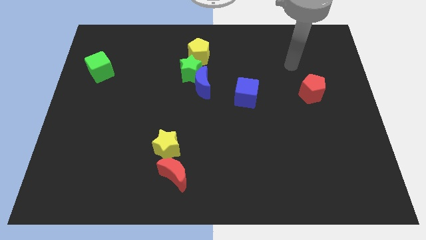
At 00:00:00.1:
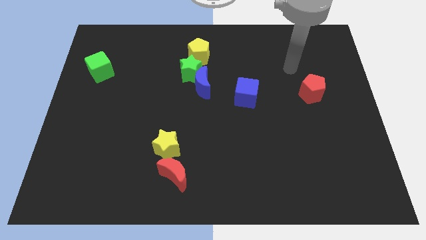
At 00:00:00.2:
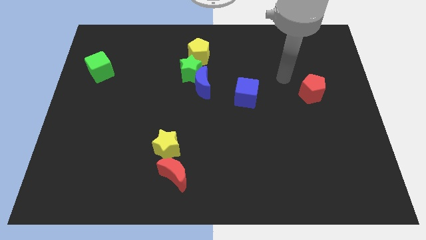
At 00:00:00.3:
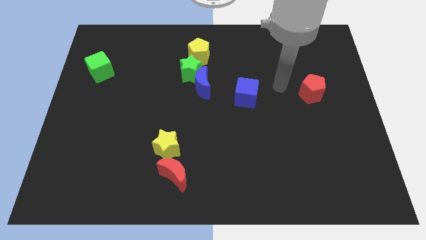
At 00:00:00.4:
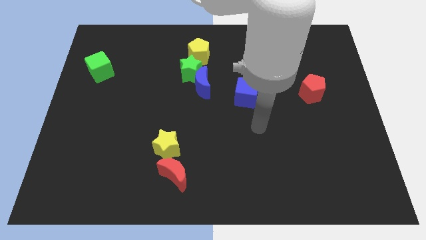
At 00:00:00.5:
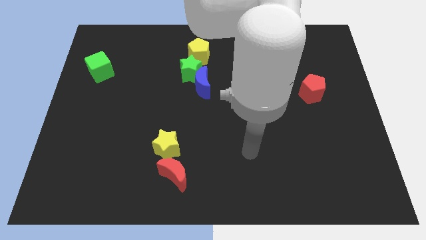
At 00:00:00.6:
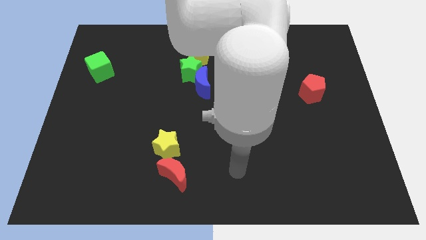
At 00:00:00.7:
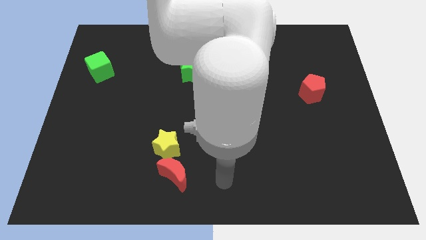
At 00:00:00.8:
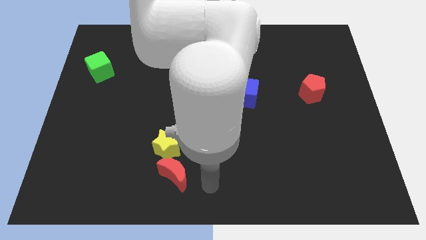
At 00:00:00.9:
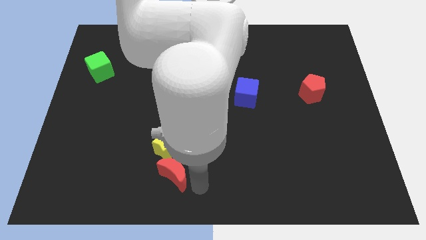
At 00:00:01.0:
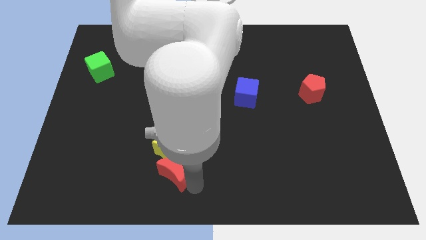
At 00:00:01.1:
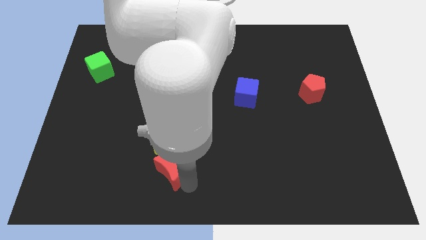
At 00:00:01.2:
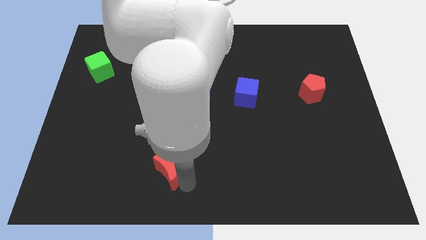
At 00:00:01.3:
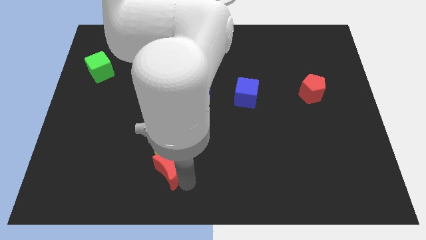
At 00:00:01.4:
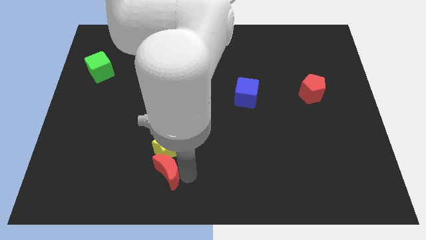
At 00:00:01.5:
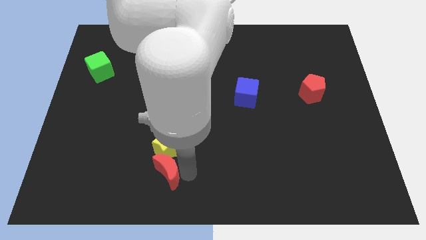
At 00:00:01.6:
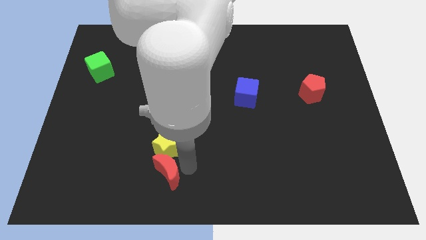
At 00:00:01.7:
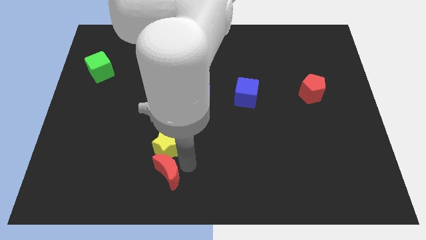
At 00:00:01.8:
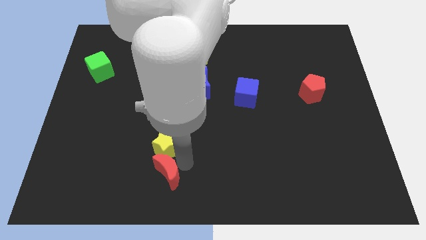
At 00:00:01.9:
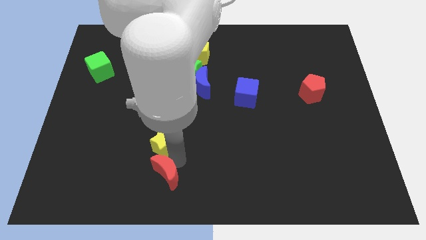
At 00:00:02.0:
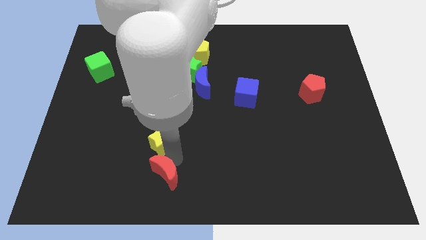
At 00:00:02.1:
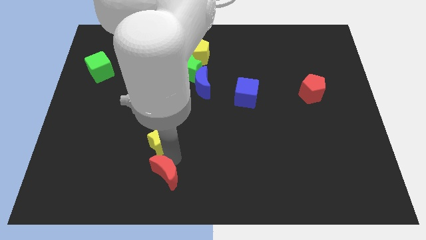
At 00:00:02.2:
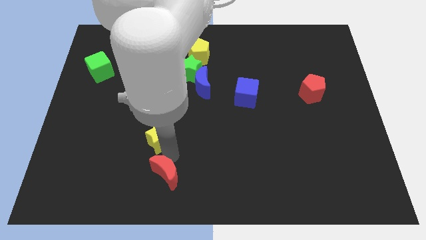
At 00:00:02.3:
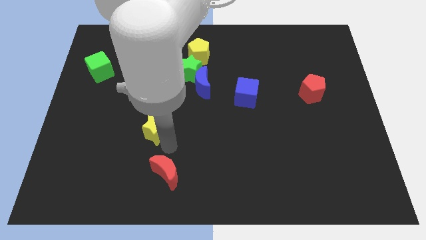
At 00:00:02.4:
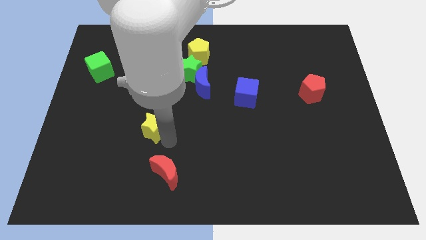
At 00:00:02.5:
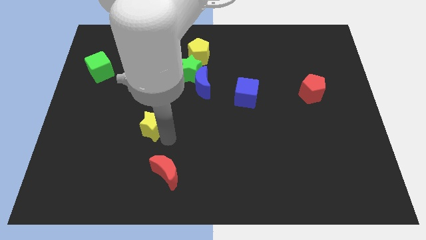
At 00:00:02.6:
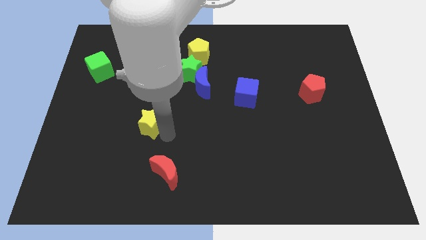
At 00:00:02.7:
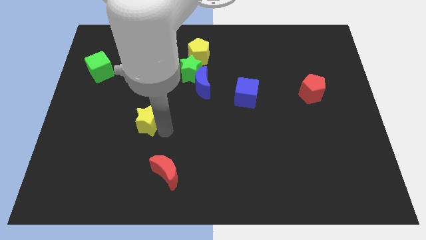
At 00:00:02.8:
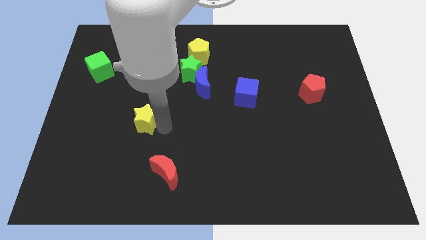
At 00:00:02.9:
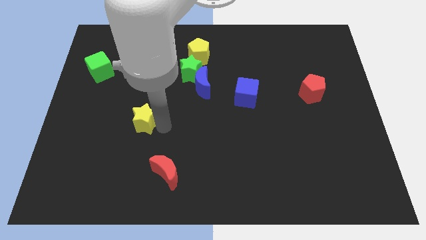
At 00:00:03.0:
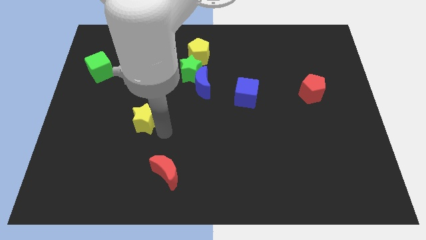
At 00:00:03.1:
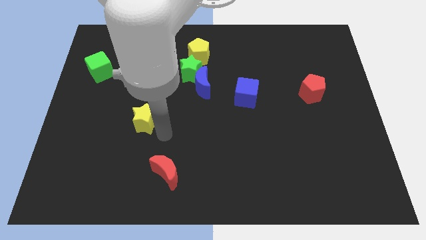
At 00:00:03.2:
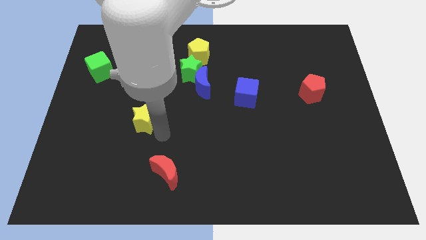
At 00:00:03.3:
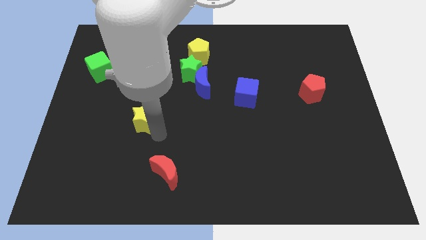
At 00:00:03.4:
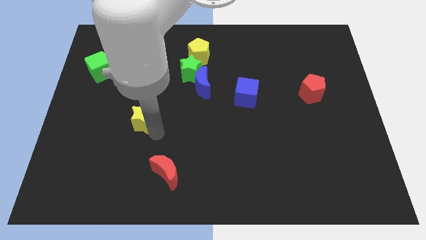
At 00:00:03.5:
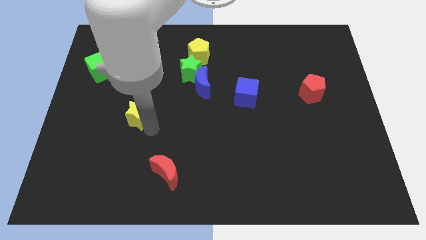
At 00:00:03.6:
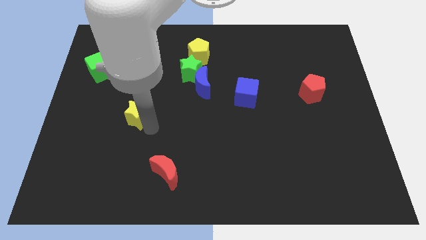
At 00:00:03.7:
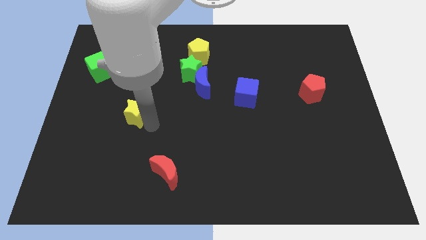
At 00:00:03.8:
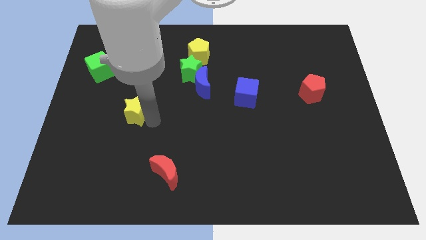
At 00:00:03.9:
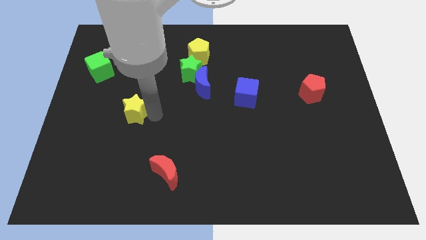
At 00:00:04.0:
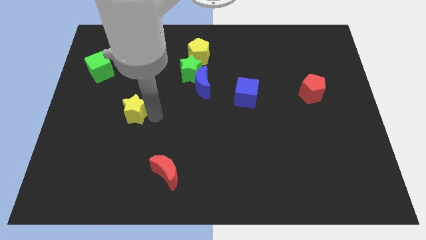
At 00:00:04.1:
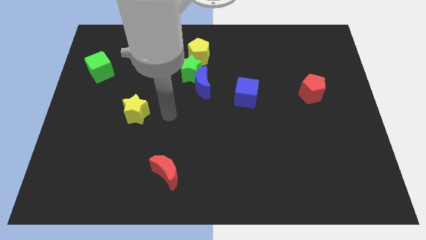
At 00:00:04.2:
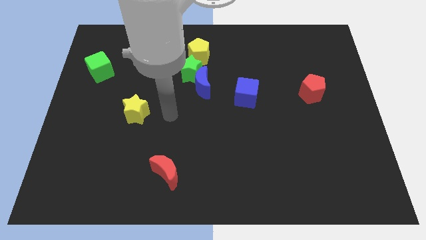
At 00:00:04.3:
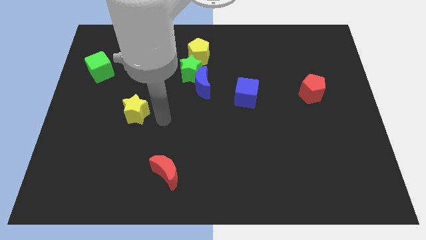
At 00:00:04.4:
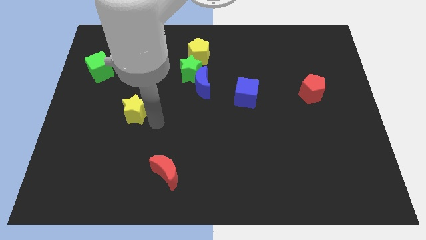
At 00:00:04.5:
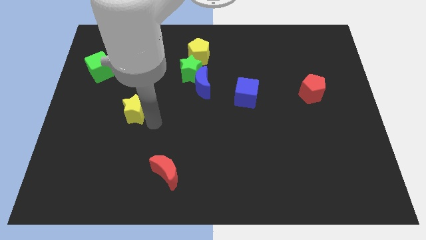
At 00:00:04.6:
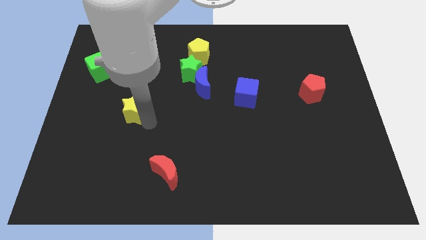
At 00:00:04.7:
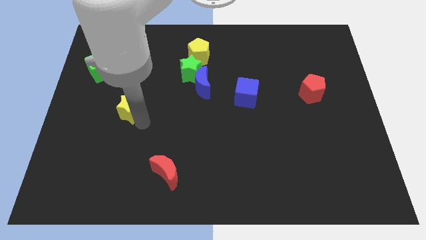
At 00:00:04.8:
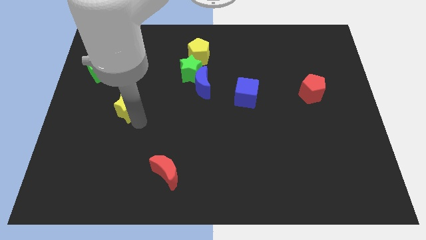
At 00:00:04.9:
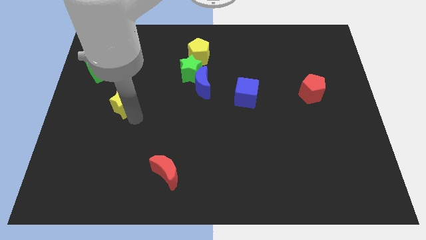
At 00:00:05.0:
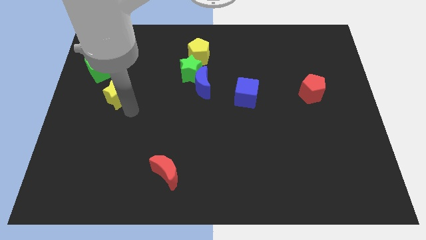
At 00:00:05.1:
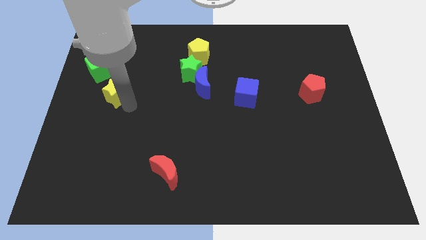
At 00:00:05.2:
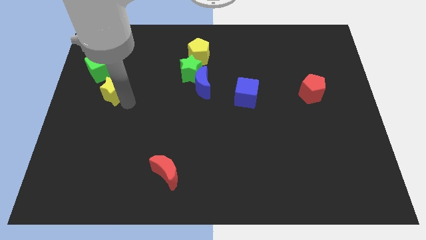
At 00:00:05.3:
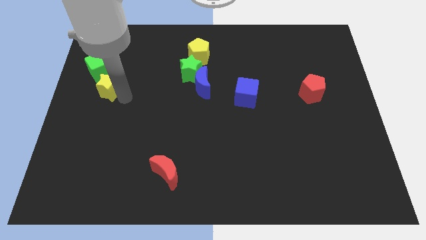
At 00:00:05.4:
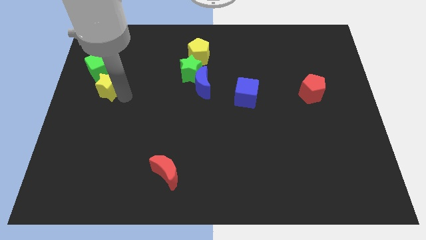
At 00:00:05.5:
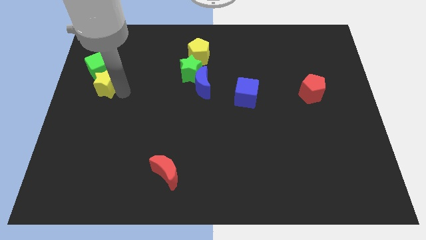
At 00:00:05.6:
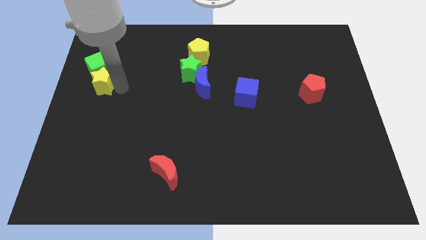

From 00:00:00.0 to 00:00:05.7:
push the yellow star close to the green cube

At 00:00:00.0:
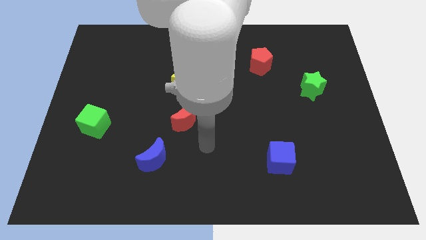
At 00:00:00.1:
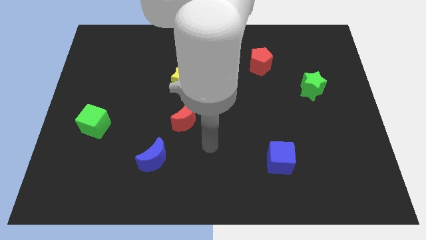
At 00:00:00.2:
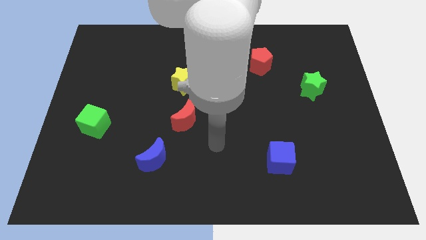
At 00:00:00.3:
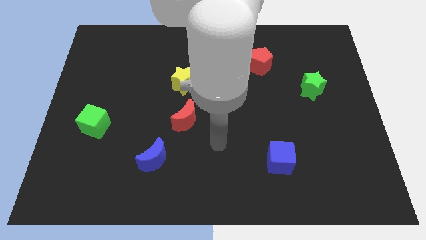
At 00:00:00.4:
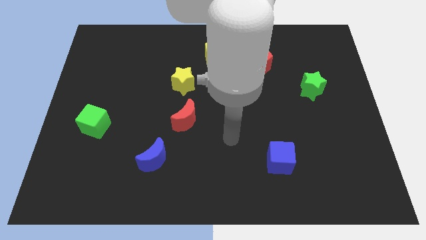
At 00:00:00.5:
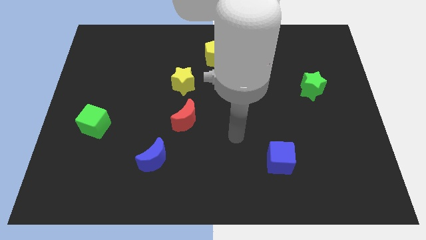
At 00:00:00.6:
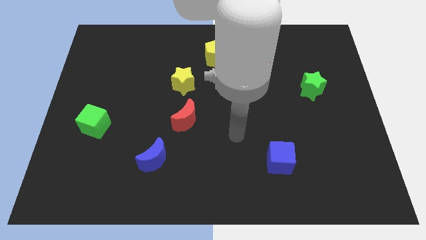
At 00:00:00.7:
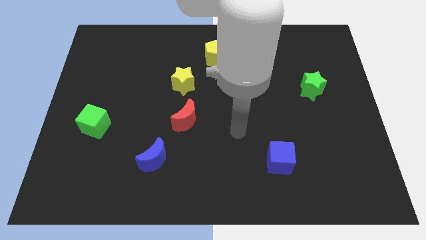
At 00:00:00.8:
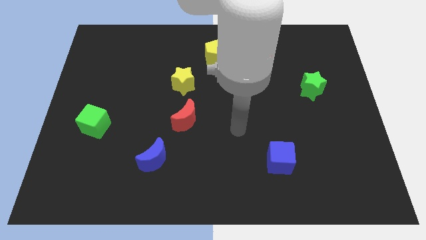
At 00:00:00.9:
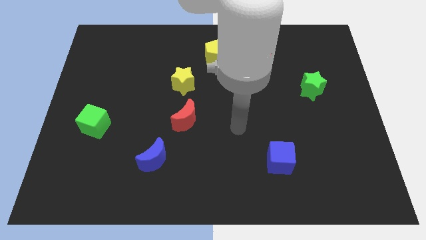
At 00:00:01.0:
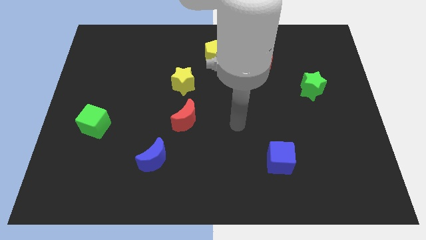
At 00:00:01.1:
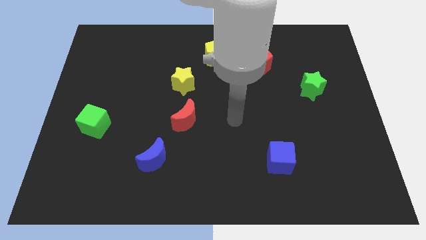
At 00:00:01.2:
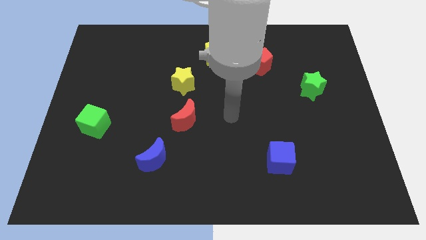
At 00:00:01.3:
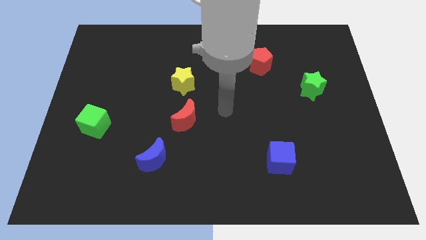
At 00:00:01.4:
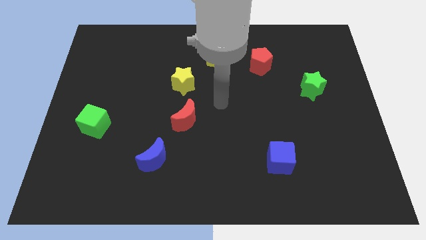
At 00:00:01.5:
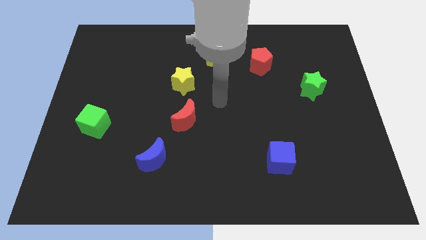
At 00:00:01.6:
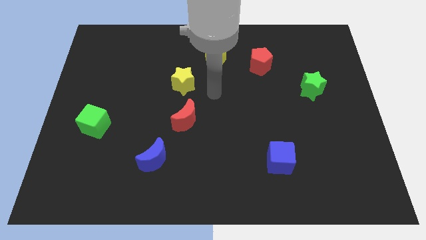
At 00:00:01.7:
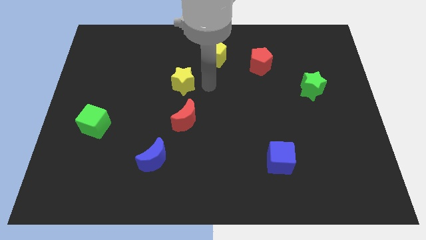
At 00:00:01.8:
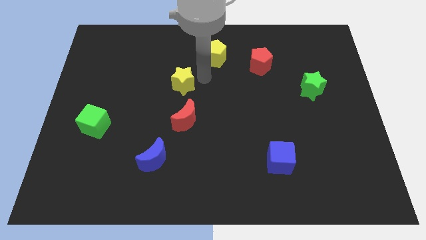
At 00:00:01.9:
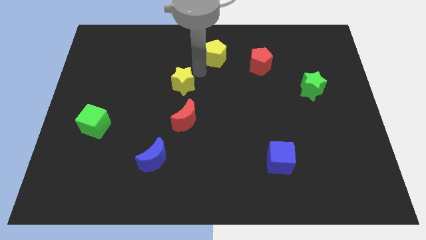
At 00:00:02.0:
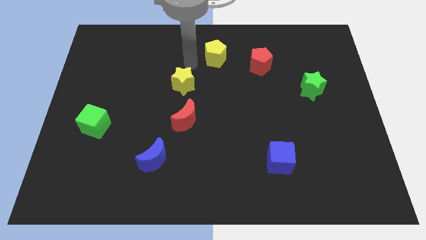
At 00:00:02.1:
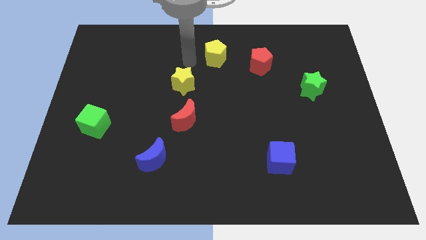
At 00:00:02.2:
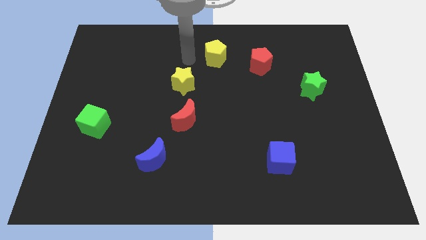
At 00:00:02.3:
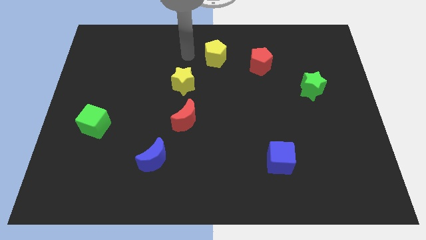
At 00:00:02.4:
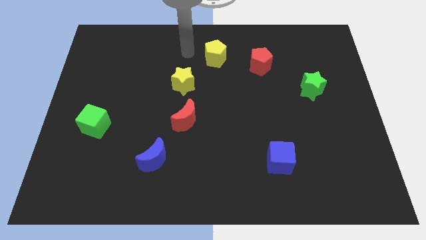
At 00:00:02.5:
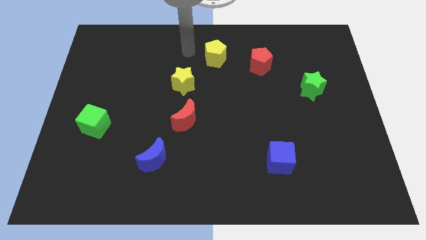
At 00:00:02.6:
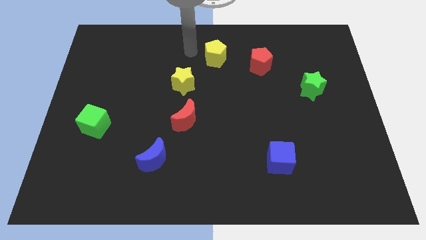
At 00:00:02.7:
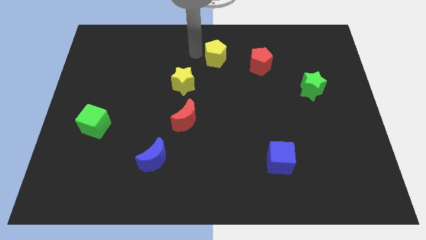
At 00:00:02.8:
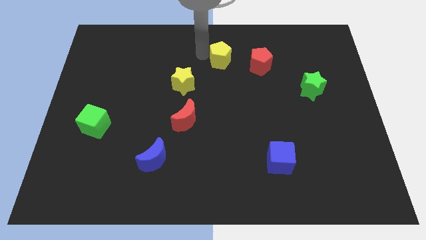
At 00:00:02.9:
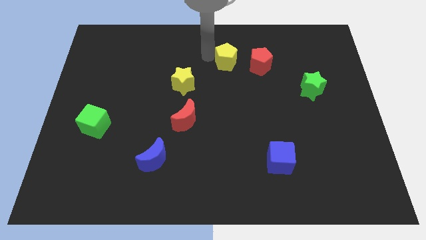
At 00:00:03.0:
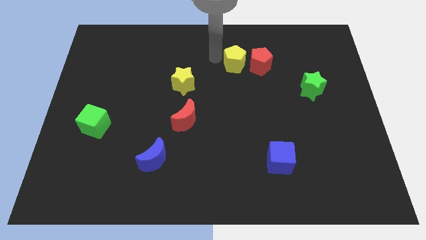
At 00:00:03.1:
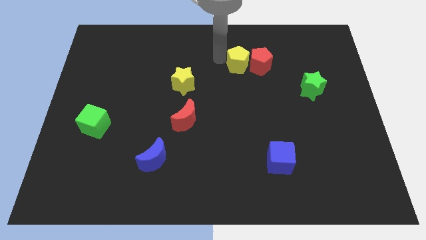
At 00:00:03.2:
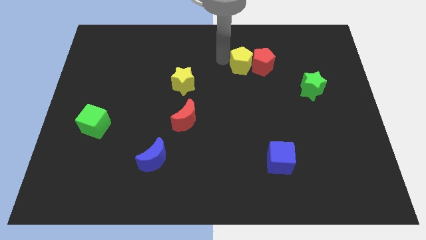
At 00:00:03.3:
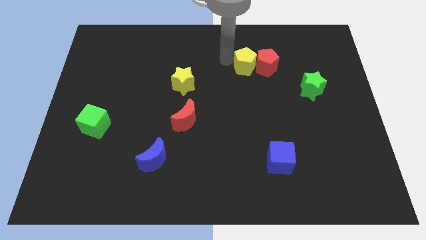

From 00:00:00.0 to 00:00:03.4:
put the yellow pentagon to the red pentagon
